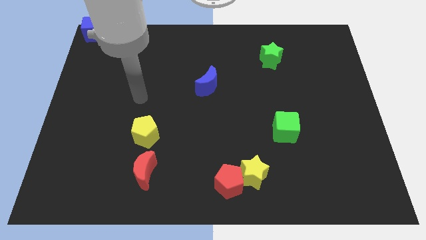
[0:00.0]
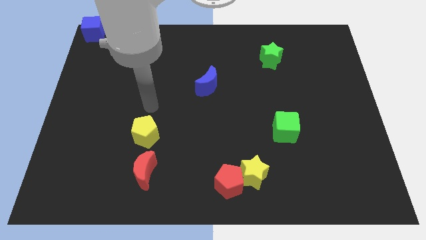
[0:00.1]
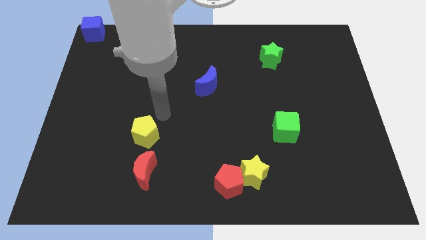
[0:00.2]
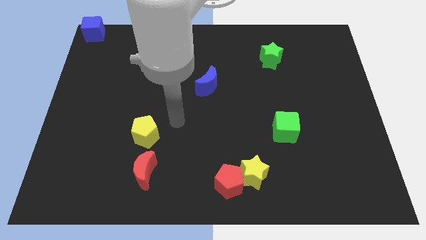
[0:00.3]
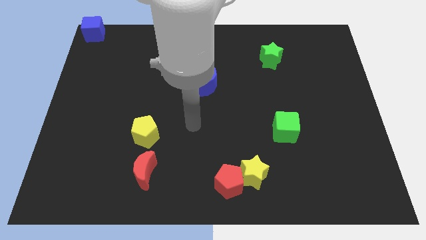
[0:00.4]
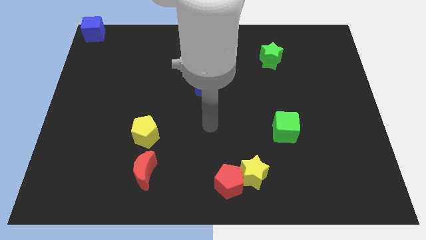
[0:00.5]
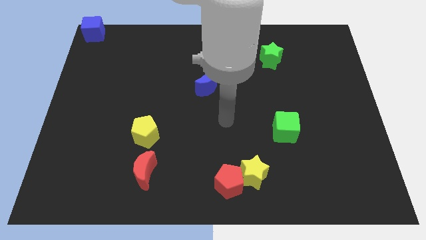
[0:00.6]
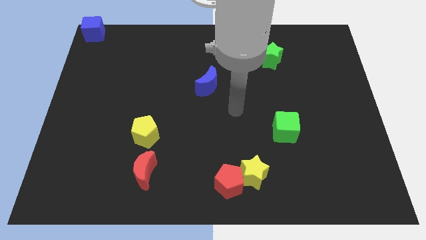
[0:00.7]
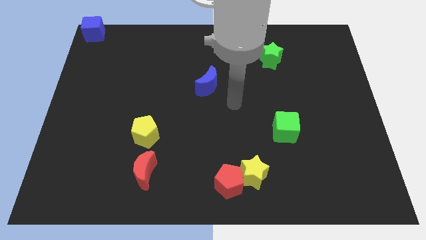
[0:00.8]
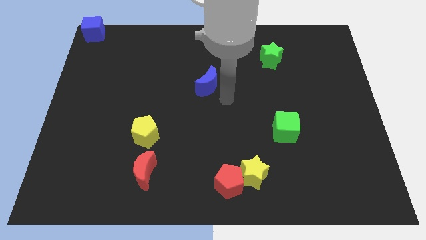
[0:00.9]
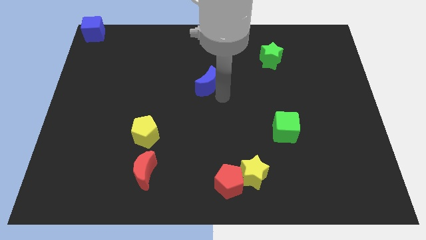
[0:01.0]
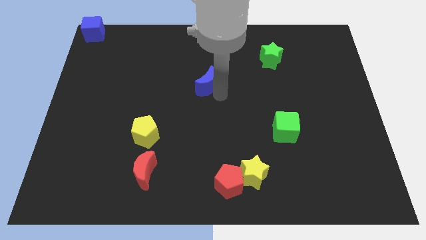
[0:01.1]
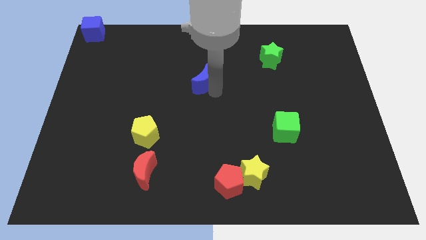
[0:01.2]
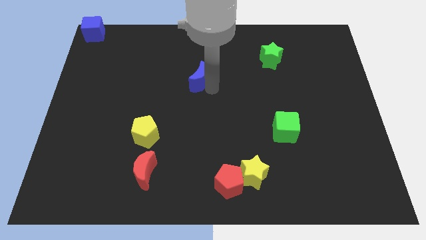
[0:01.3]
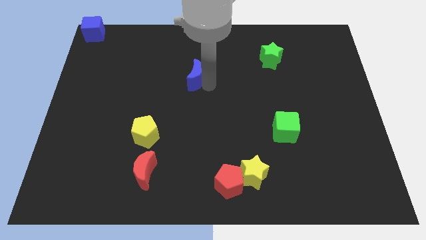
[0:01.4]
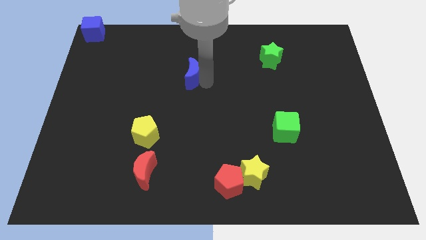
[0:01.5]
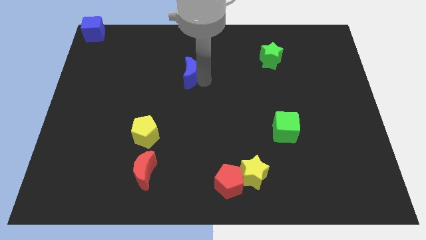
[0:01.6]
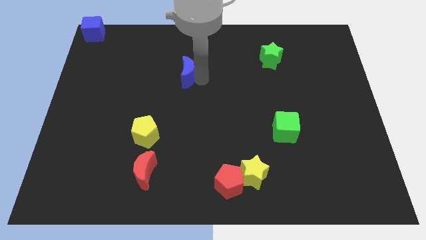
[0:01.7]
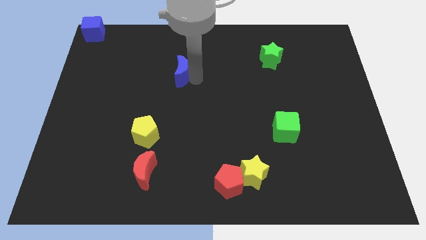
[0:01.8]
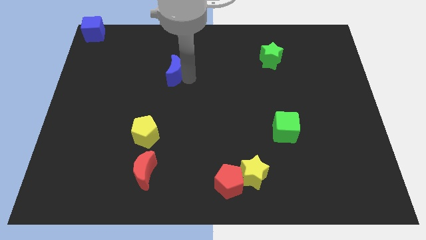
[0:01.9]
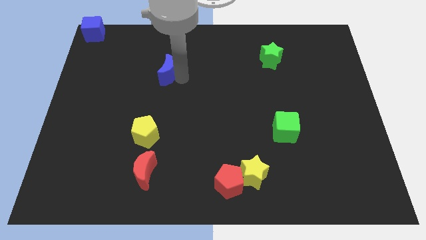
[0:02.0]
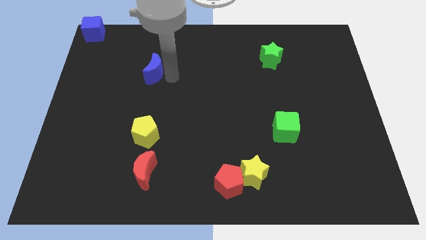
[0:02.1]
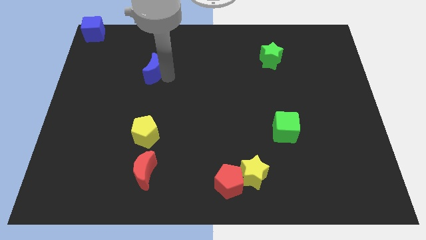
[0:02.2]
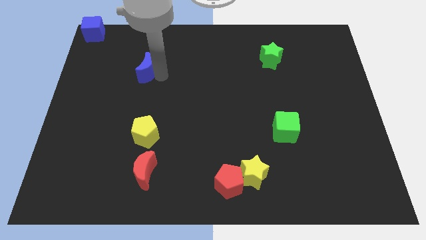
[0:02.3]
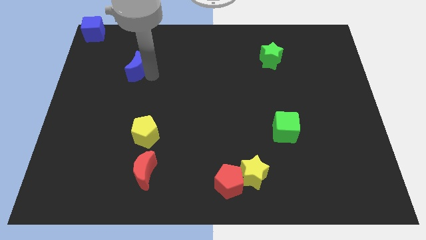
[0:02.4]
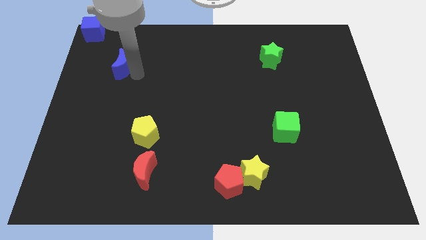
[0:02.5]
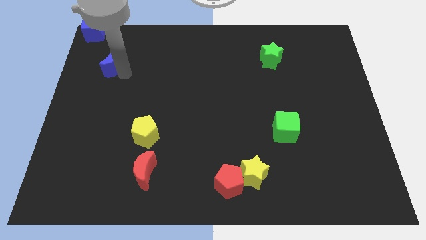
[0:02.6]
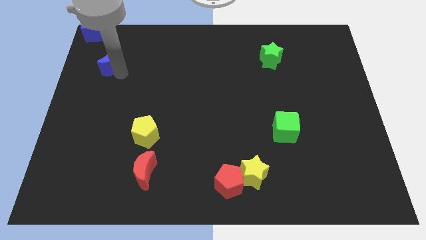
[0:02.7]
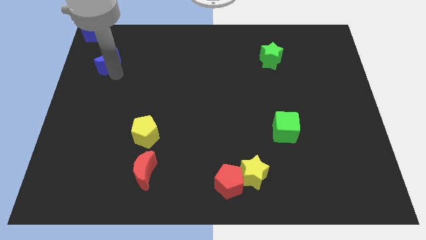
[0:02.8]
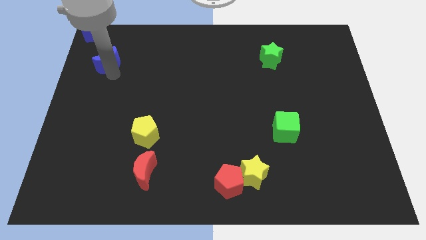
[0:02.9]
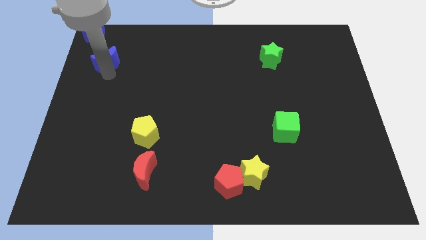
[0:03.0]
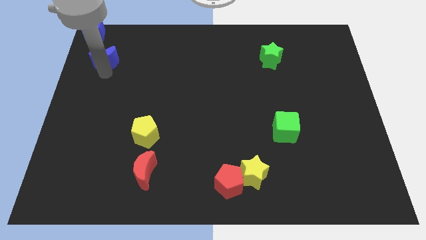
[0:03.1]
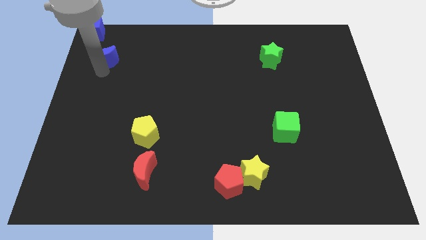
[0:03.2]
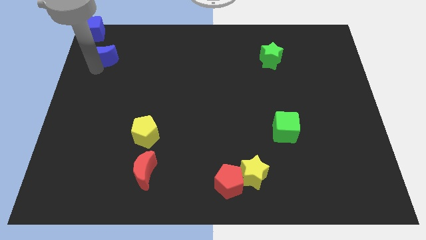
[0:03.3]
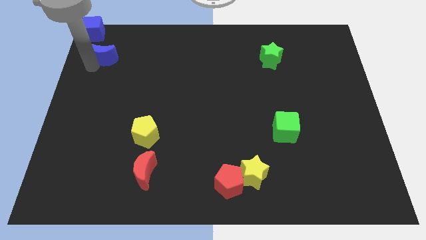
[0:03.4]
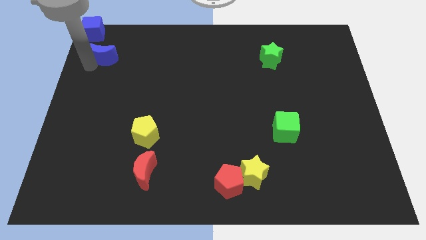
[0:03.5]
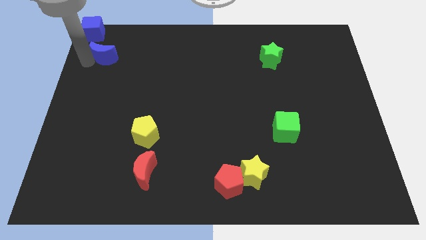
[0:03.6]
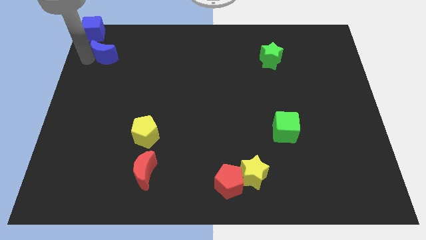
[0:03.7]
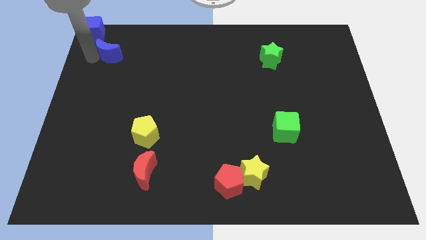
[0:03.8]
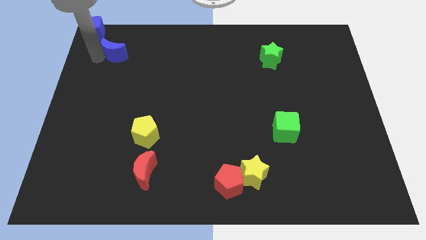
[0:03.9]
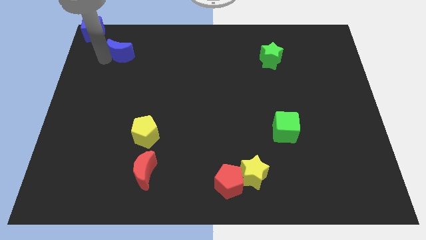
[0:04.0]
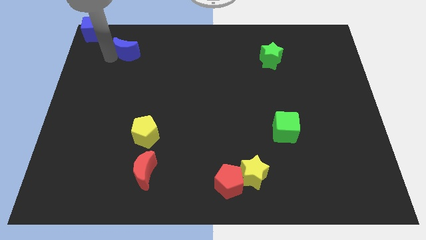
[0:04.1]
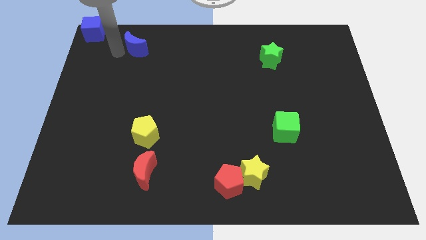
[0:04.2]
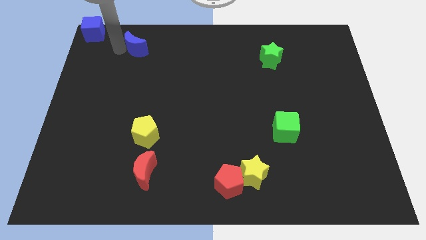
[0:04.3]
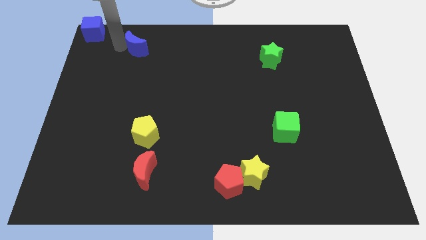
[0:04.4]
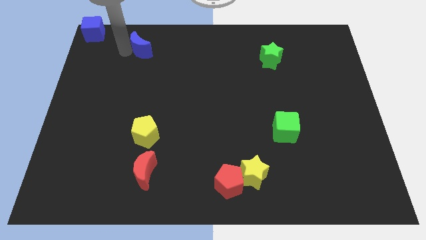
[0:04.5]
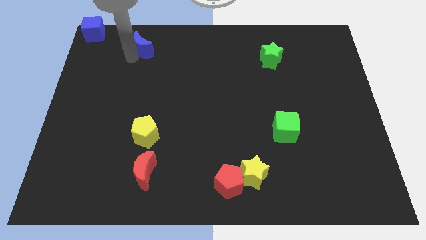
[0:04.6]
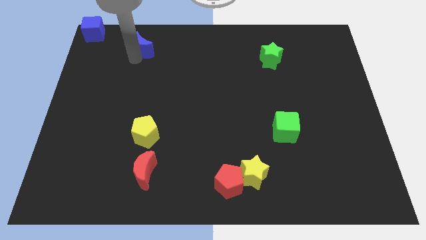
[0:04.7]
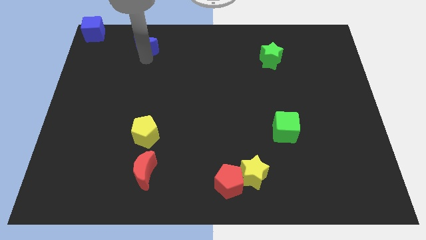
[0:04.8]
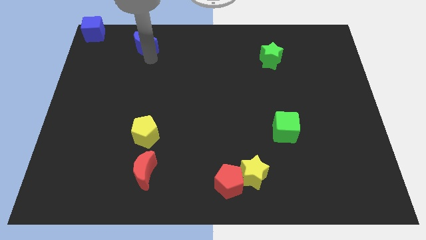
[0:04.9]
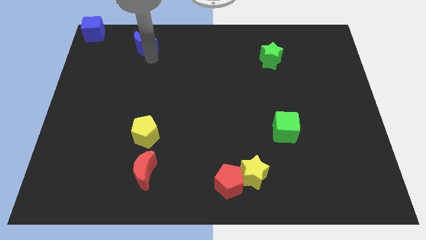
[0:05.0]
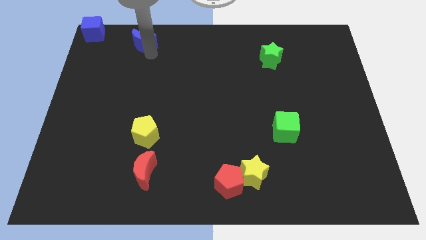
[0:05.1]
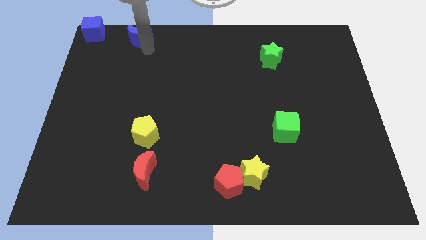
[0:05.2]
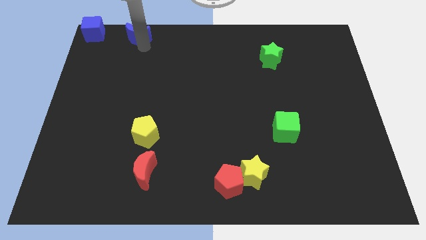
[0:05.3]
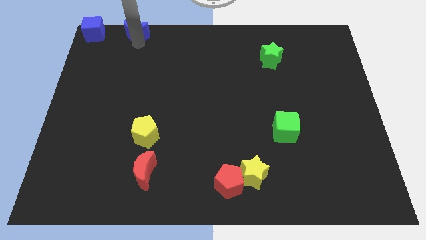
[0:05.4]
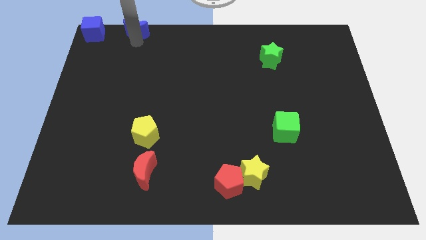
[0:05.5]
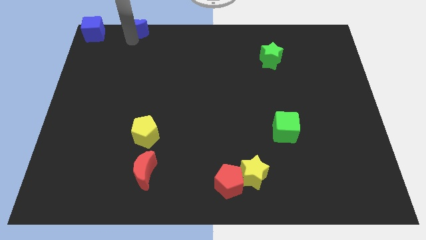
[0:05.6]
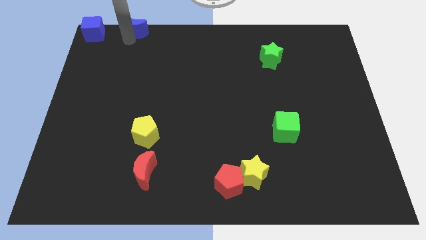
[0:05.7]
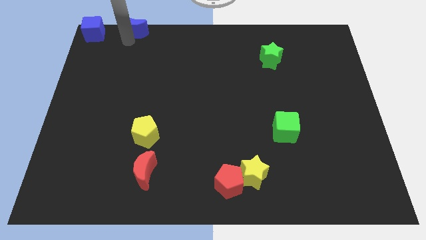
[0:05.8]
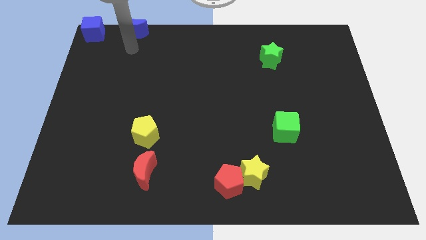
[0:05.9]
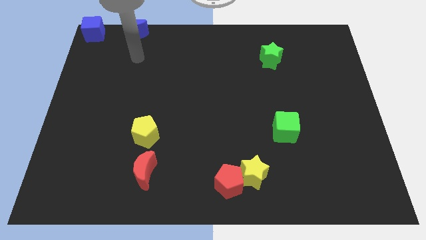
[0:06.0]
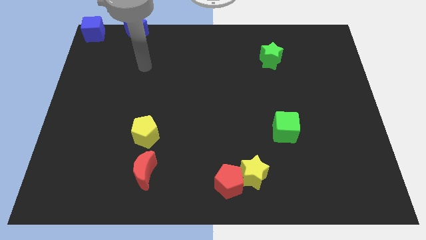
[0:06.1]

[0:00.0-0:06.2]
place the blue crescent to the right of the blue cube

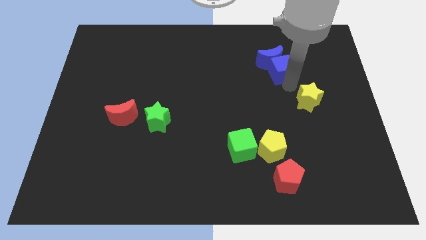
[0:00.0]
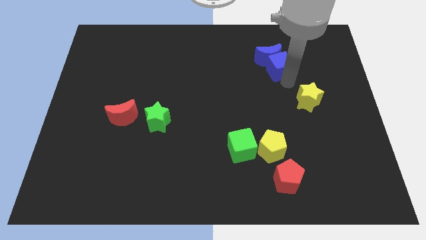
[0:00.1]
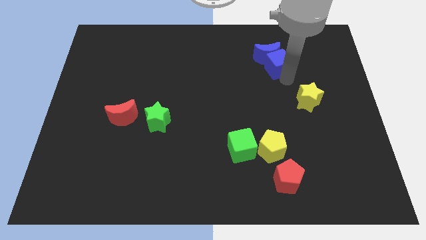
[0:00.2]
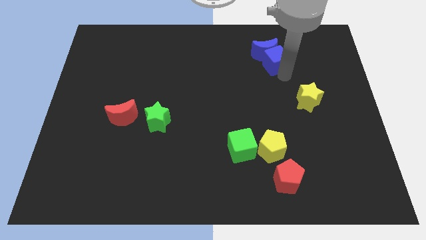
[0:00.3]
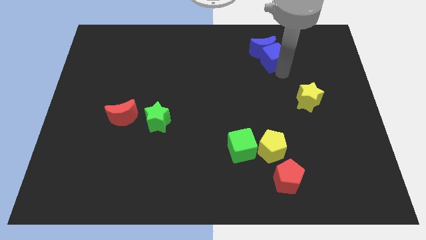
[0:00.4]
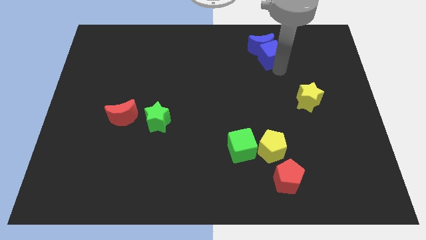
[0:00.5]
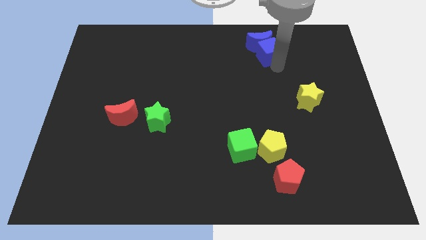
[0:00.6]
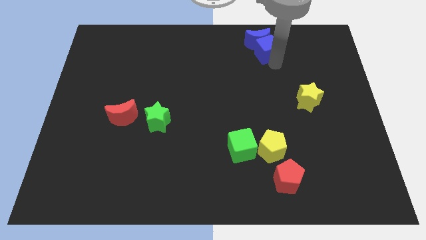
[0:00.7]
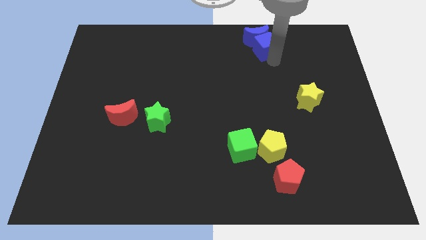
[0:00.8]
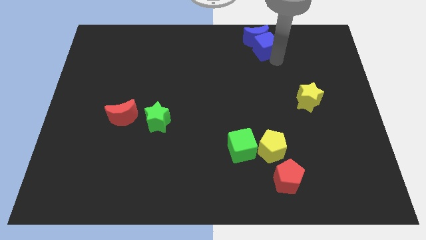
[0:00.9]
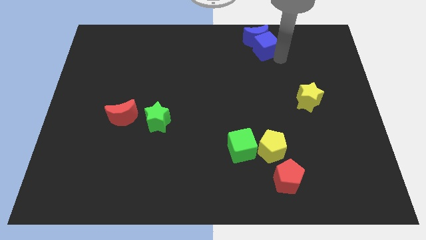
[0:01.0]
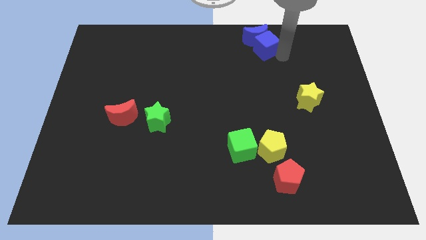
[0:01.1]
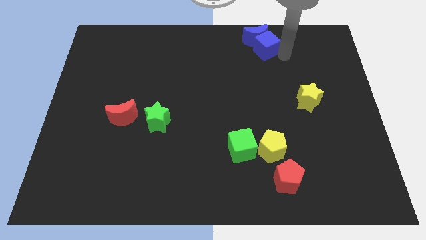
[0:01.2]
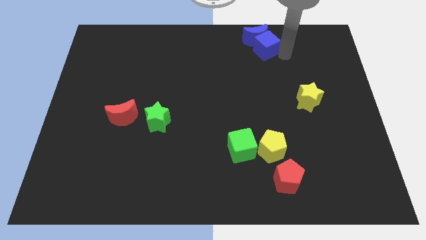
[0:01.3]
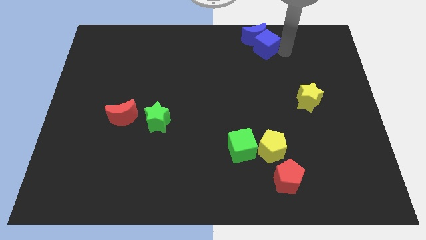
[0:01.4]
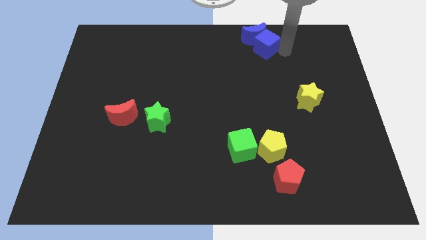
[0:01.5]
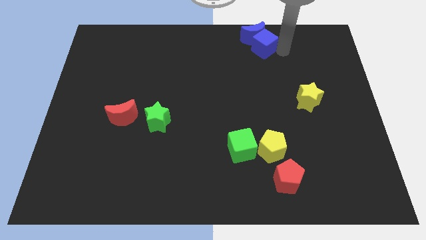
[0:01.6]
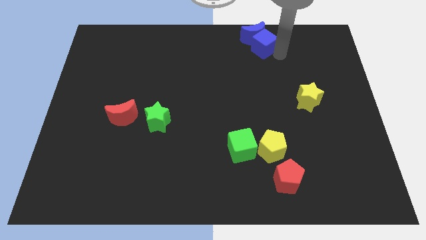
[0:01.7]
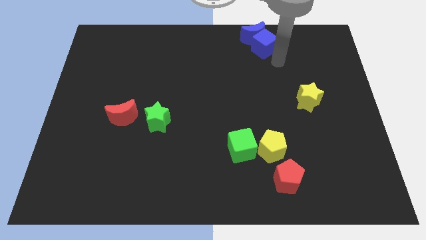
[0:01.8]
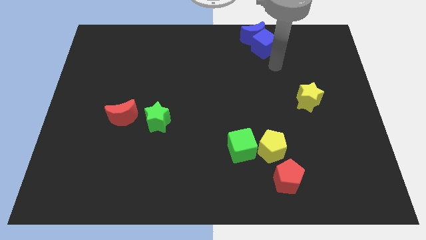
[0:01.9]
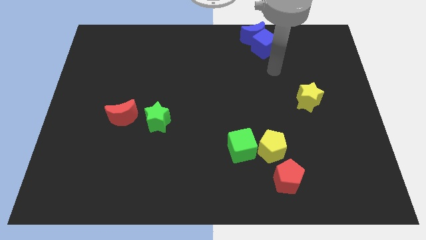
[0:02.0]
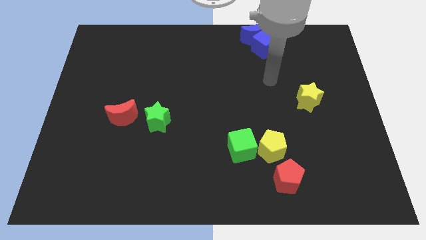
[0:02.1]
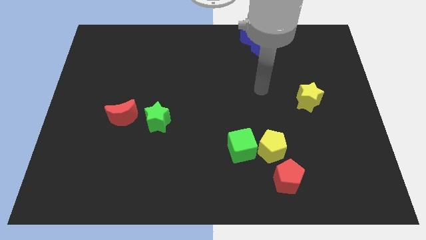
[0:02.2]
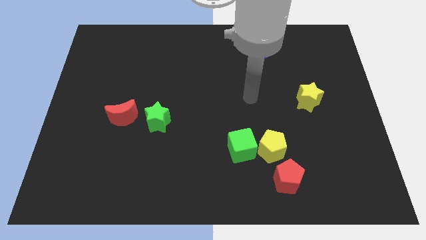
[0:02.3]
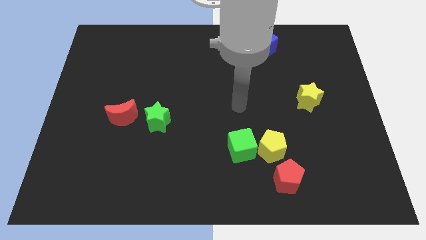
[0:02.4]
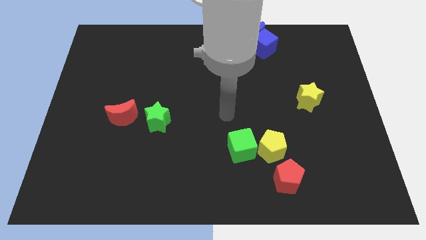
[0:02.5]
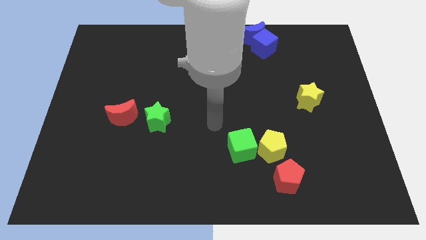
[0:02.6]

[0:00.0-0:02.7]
push the group of blue blocks to top side of the board

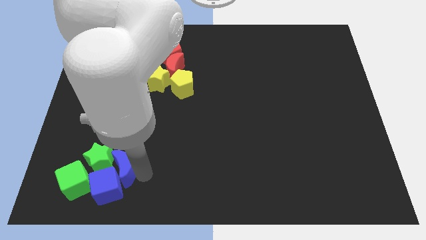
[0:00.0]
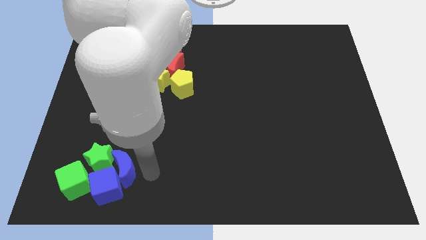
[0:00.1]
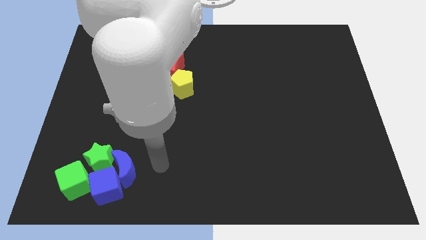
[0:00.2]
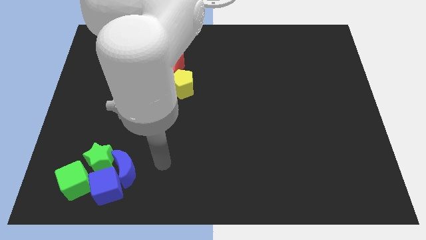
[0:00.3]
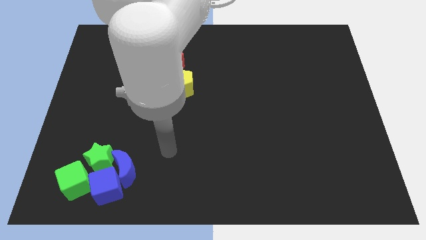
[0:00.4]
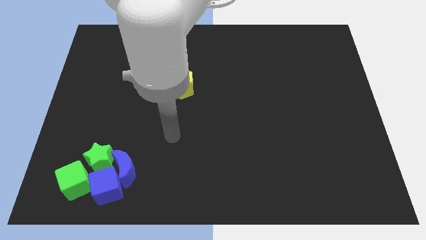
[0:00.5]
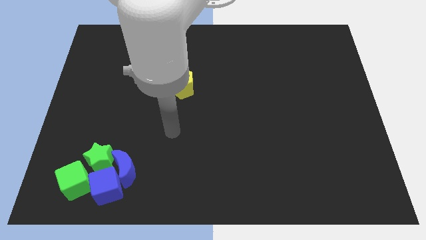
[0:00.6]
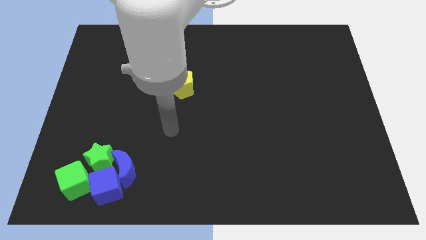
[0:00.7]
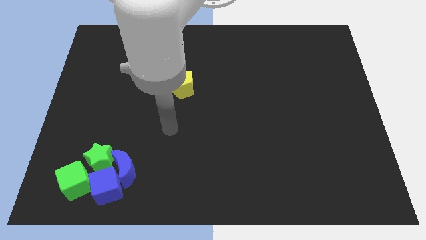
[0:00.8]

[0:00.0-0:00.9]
move your arm away from the blue crescent
